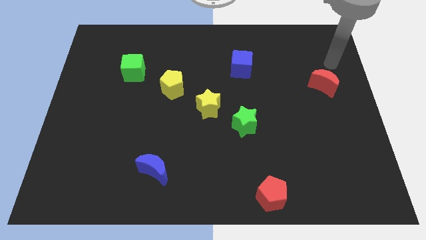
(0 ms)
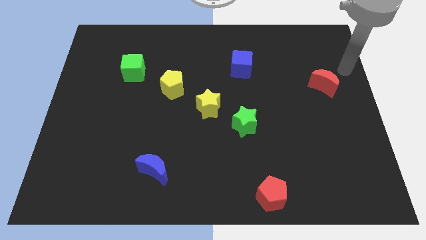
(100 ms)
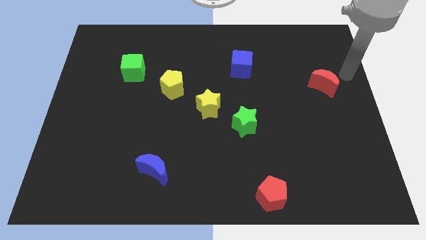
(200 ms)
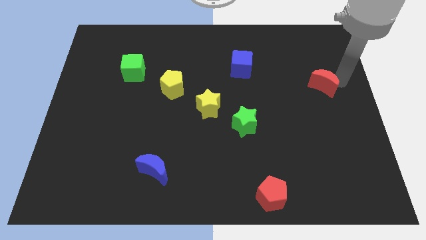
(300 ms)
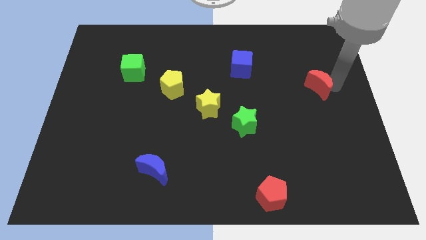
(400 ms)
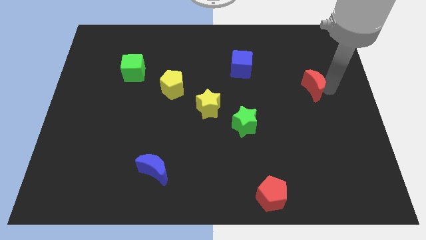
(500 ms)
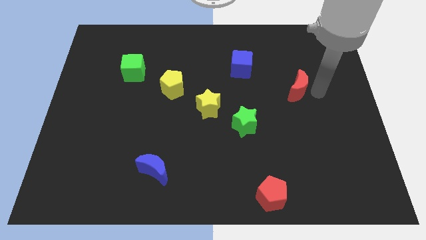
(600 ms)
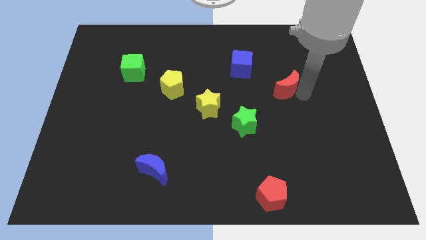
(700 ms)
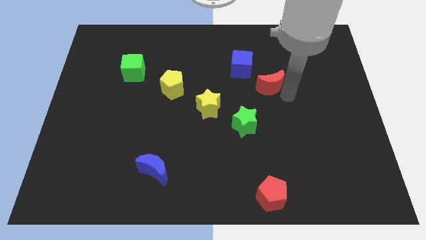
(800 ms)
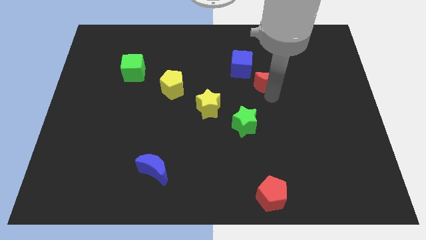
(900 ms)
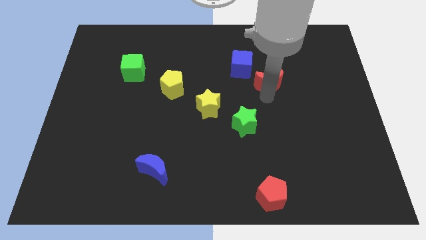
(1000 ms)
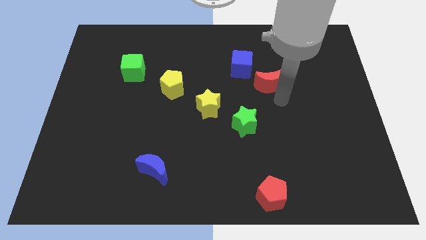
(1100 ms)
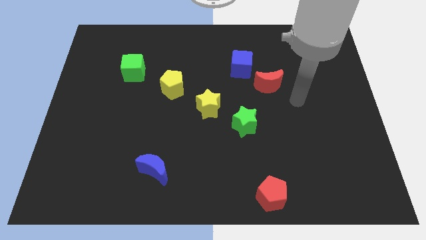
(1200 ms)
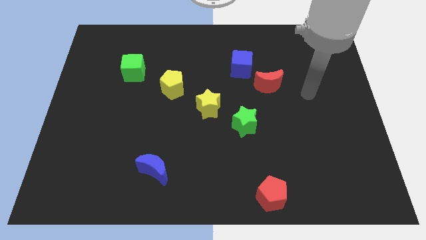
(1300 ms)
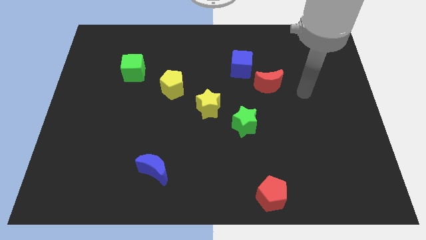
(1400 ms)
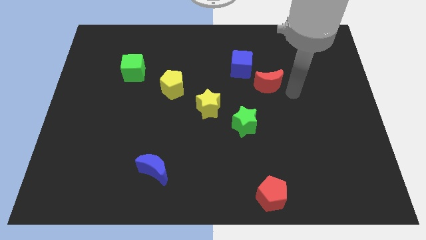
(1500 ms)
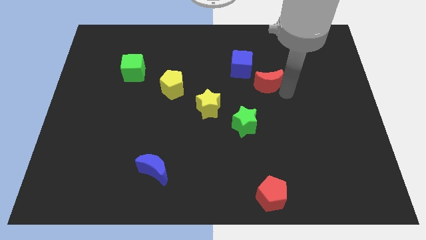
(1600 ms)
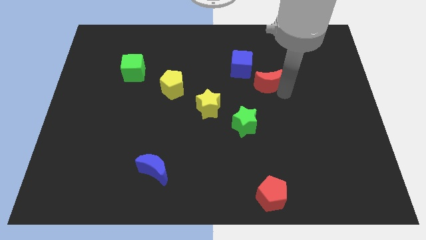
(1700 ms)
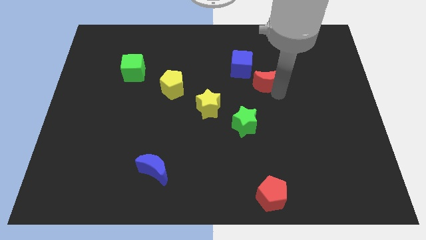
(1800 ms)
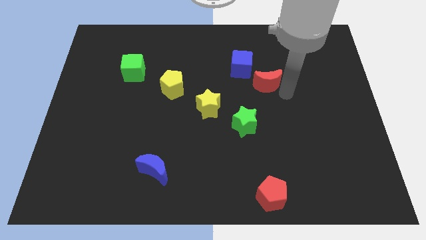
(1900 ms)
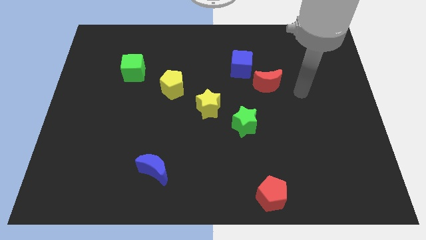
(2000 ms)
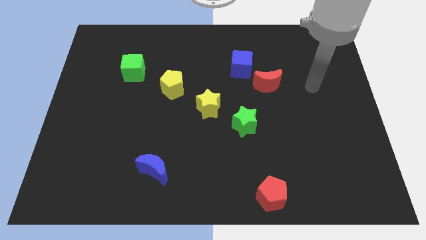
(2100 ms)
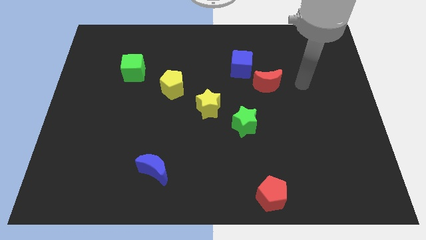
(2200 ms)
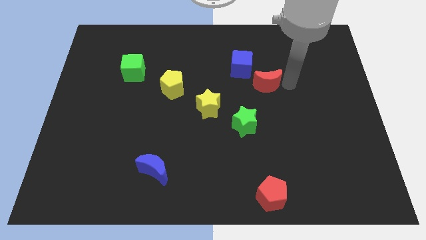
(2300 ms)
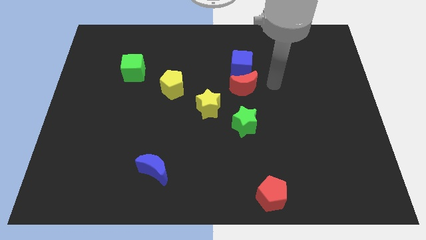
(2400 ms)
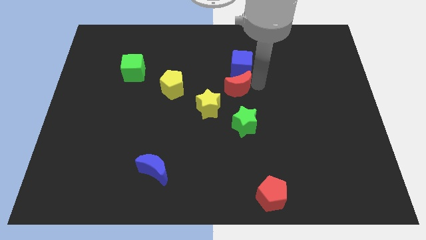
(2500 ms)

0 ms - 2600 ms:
move the red moon below the blue cube

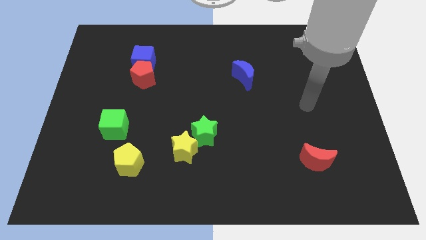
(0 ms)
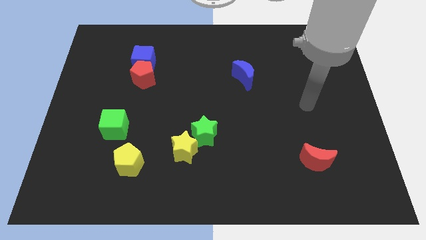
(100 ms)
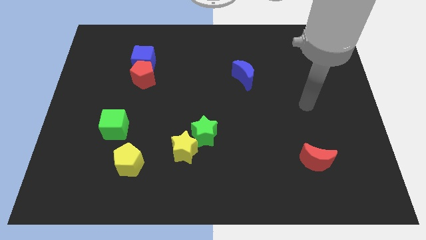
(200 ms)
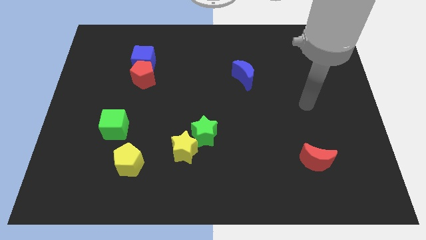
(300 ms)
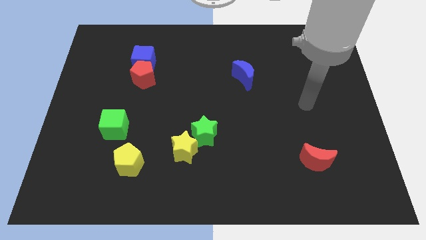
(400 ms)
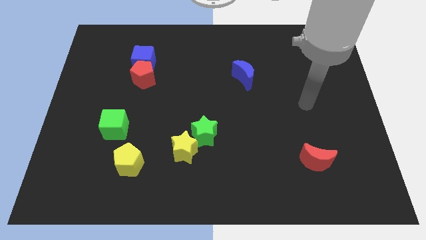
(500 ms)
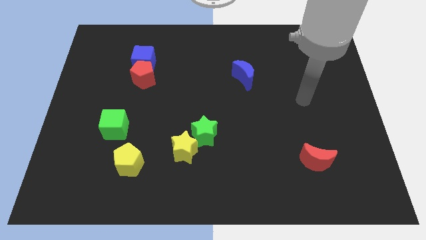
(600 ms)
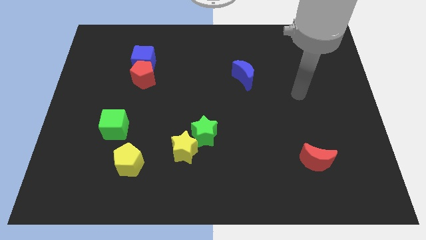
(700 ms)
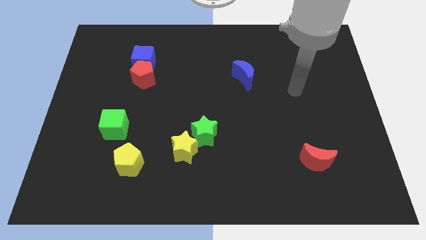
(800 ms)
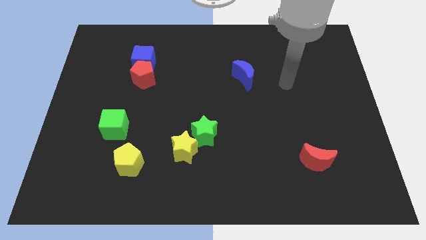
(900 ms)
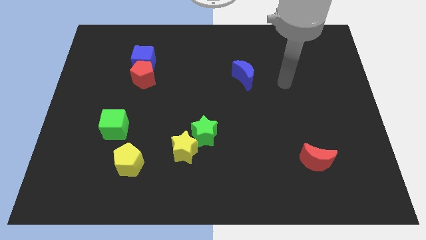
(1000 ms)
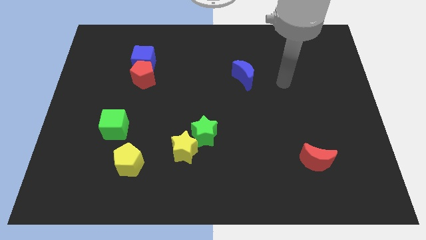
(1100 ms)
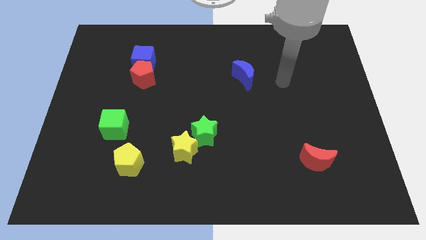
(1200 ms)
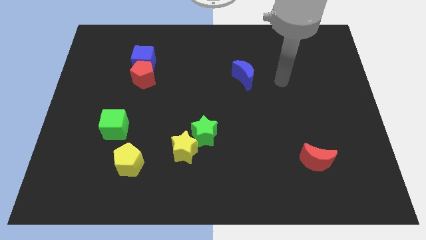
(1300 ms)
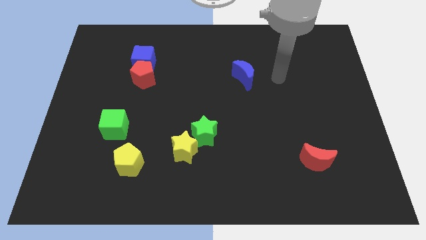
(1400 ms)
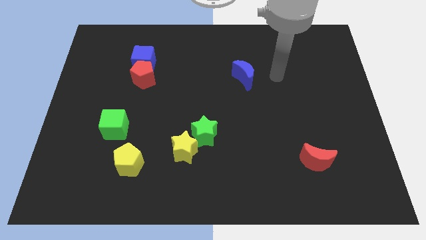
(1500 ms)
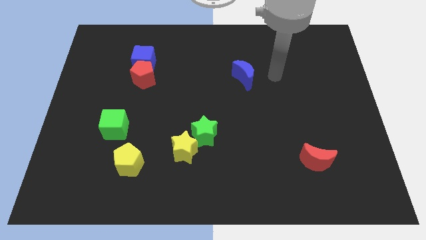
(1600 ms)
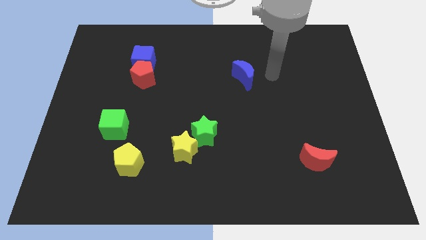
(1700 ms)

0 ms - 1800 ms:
place arm near blue blue moon

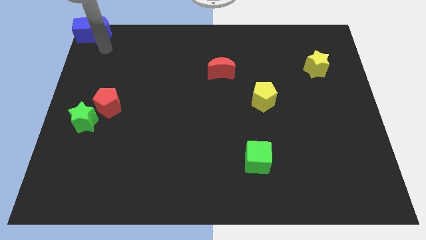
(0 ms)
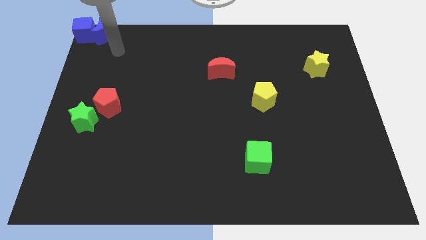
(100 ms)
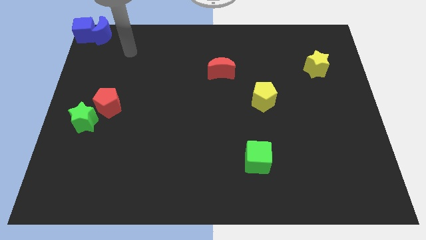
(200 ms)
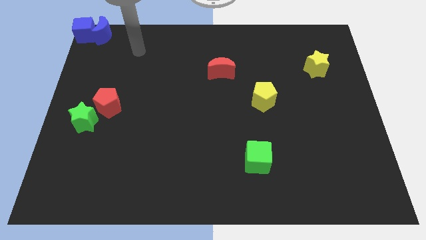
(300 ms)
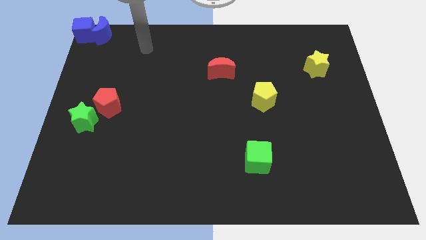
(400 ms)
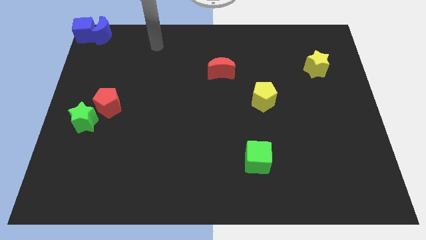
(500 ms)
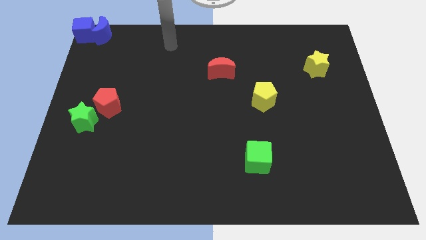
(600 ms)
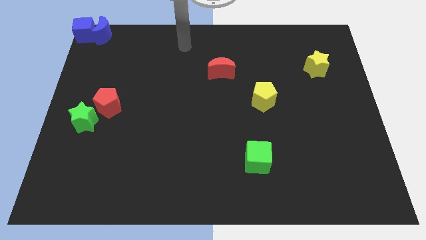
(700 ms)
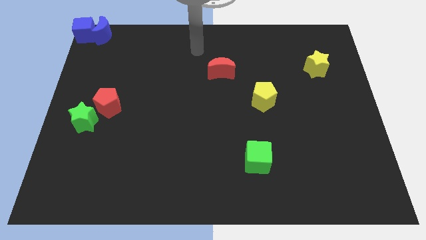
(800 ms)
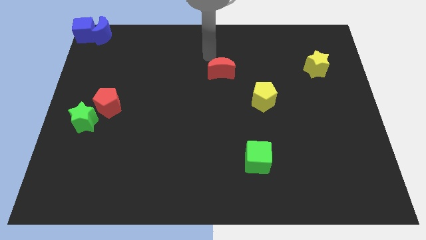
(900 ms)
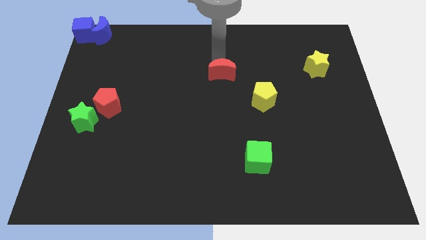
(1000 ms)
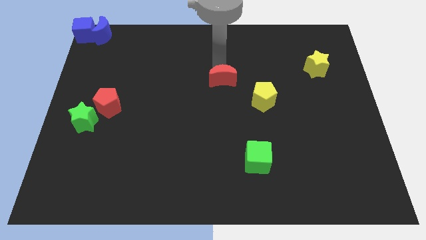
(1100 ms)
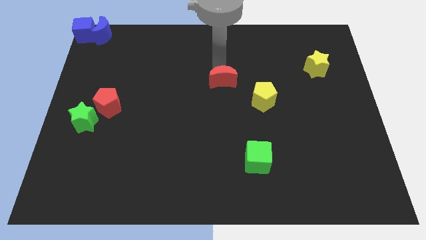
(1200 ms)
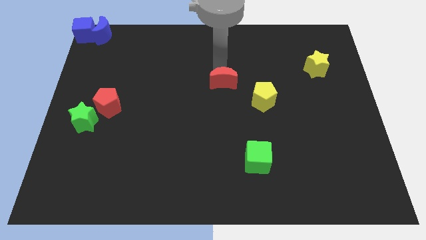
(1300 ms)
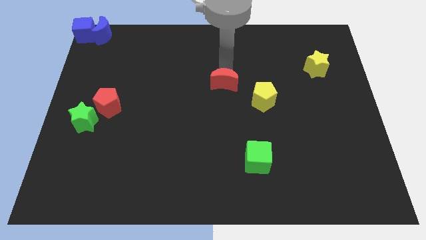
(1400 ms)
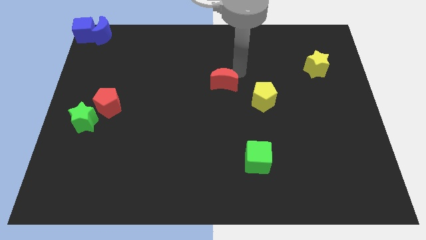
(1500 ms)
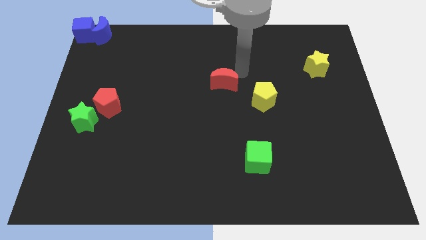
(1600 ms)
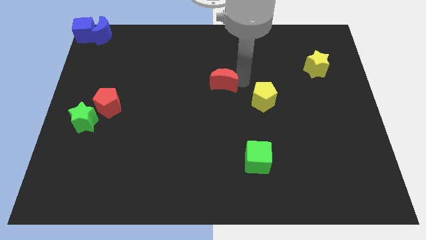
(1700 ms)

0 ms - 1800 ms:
push the red crescent slightly to the bottom

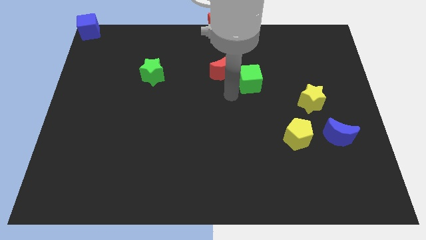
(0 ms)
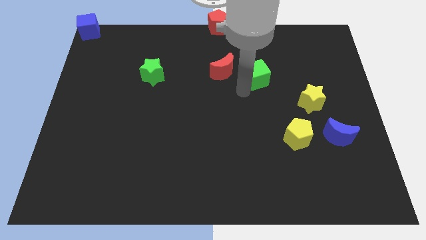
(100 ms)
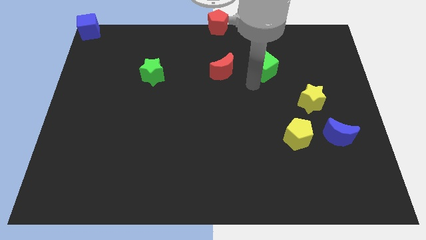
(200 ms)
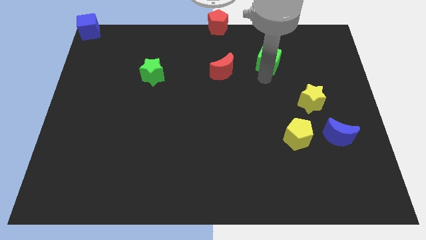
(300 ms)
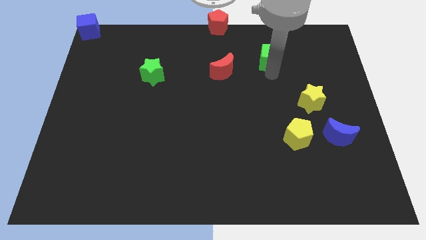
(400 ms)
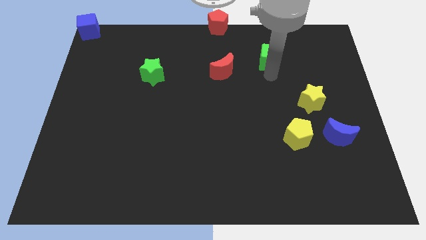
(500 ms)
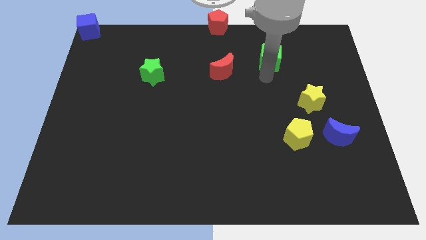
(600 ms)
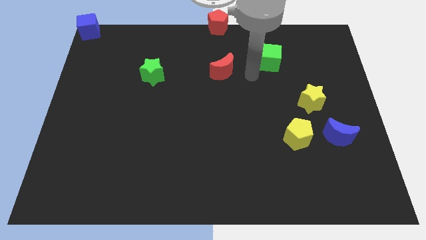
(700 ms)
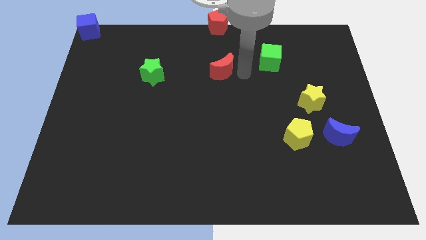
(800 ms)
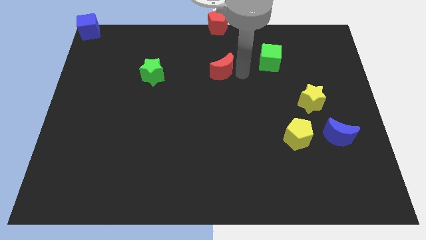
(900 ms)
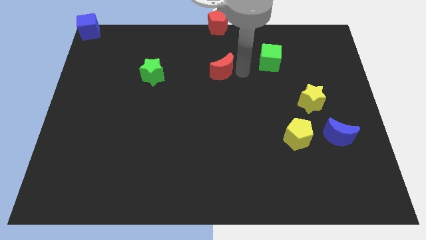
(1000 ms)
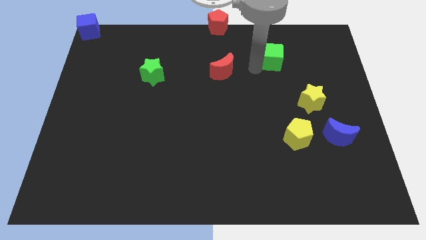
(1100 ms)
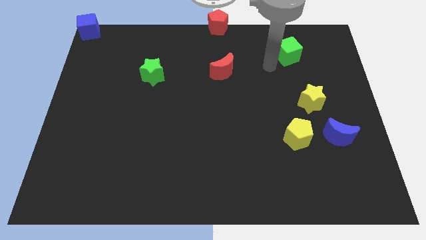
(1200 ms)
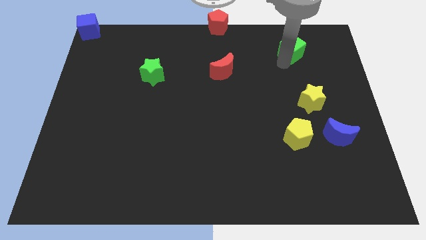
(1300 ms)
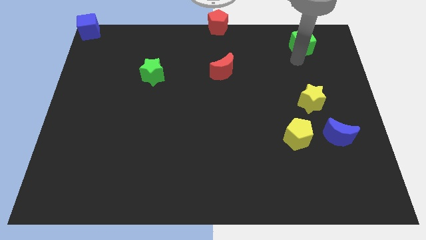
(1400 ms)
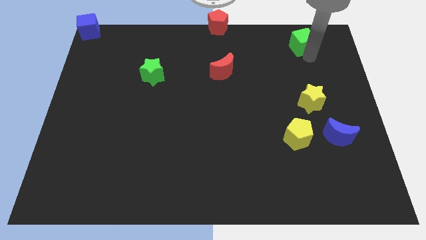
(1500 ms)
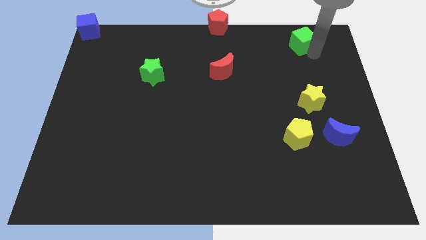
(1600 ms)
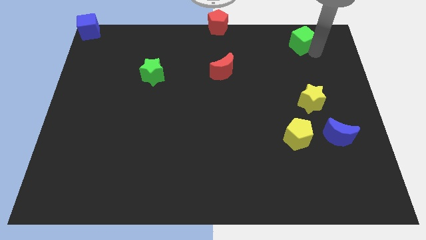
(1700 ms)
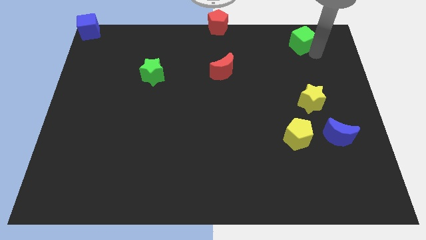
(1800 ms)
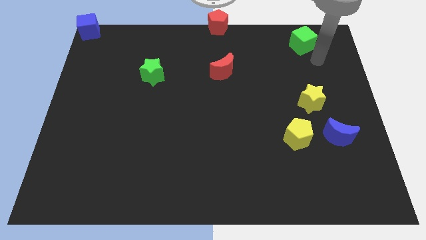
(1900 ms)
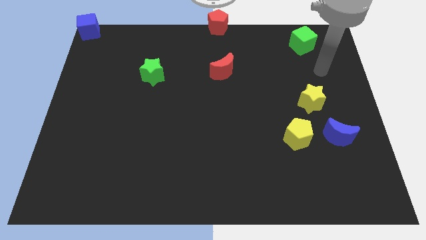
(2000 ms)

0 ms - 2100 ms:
place the green cube vertically above the yellow star

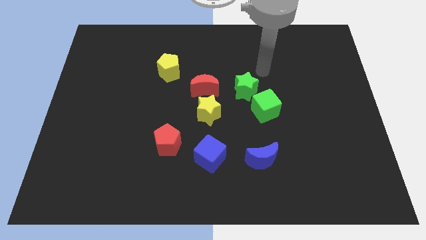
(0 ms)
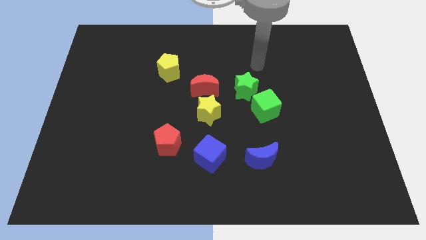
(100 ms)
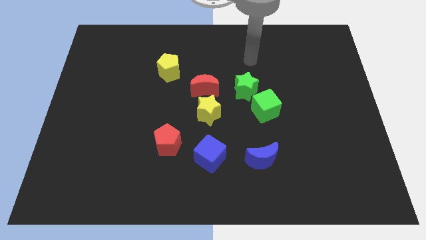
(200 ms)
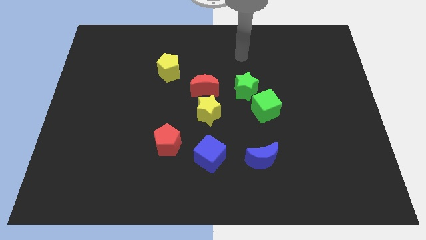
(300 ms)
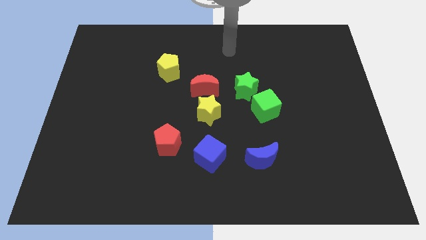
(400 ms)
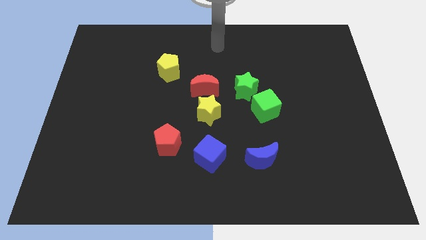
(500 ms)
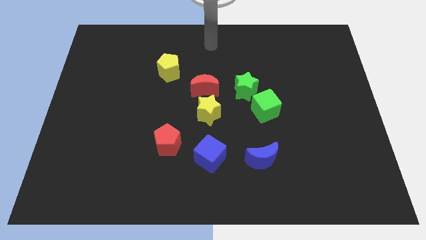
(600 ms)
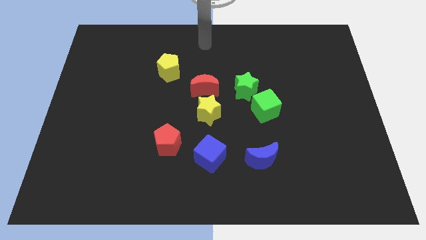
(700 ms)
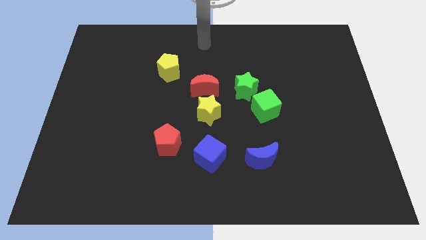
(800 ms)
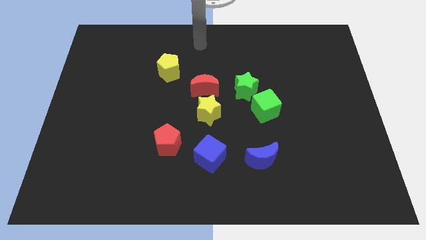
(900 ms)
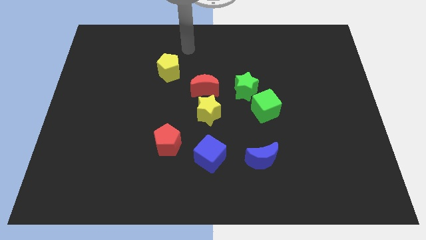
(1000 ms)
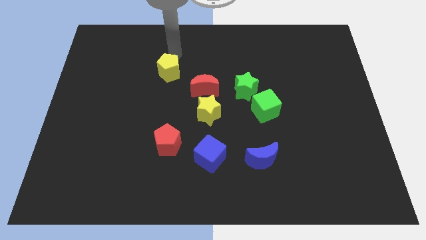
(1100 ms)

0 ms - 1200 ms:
move the arm away from the green star
